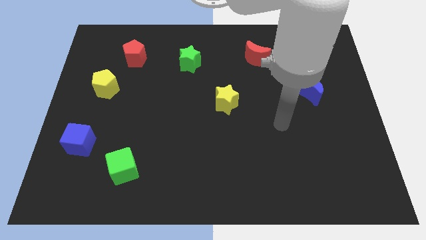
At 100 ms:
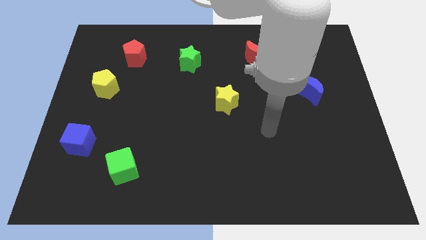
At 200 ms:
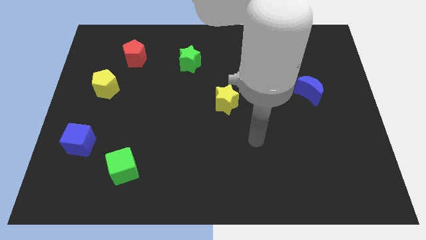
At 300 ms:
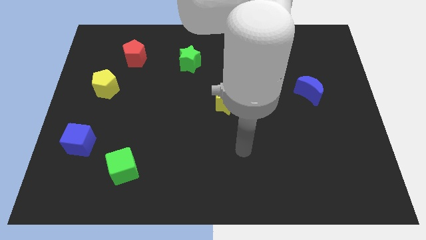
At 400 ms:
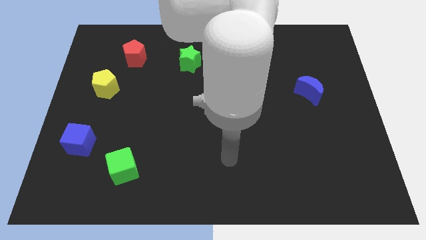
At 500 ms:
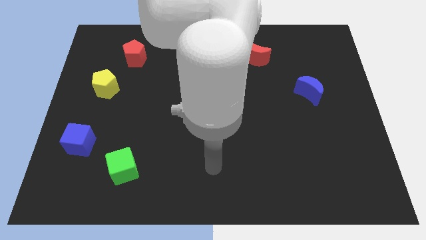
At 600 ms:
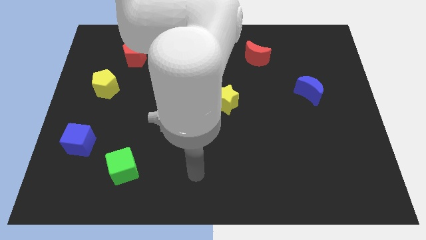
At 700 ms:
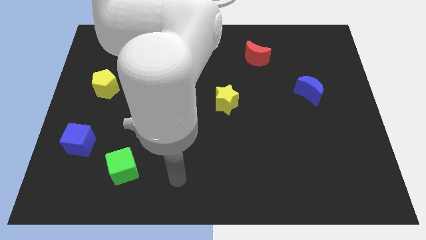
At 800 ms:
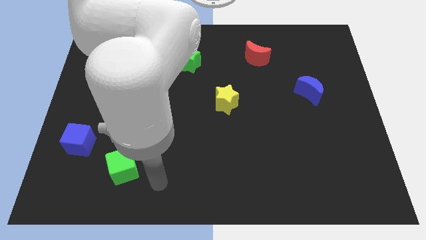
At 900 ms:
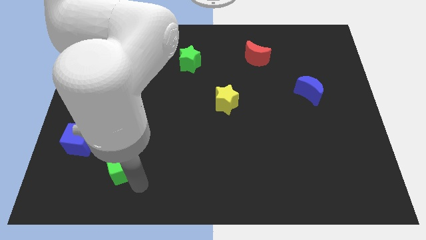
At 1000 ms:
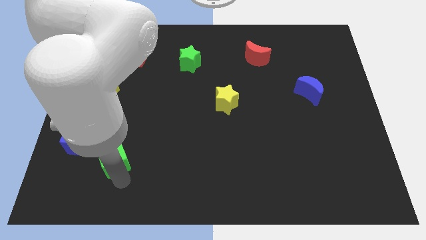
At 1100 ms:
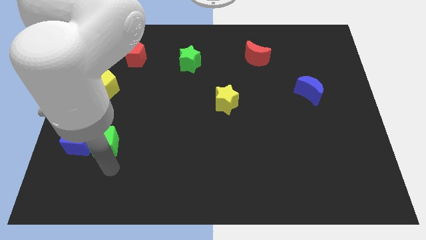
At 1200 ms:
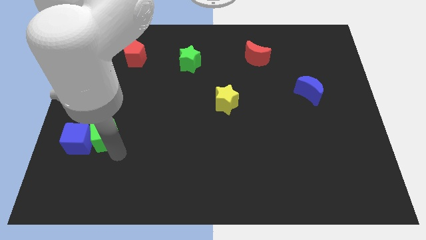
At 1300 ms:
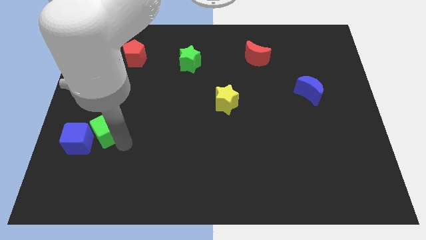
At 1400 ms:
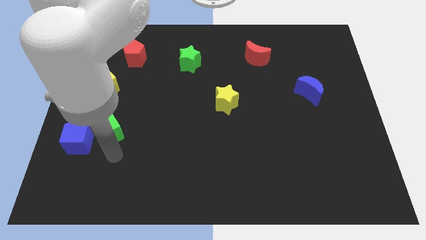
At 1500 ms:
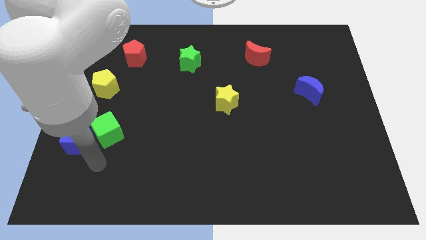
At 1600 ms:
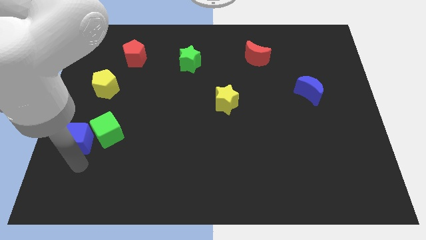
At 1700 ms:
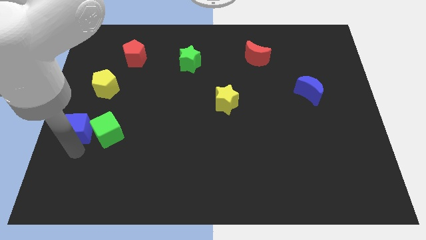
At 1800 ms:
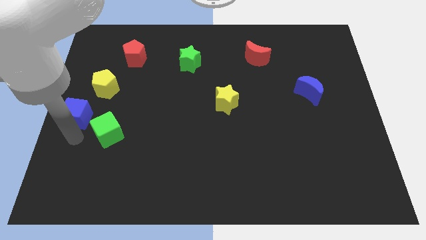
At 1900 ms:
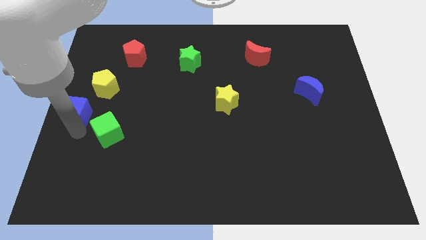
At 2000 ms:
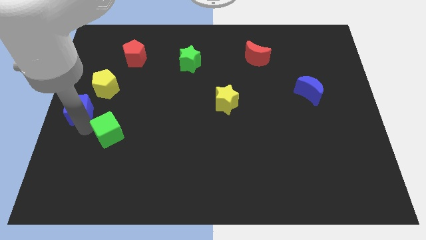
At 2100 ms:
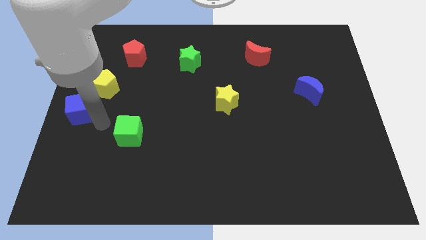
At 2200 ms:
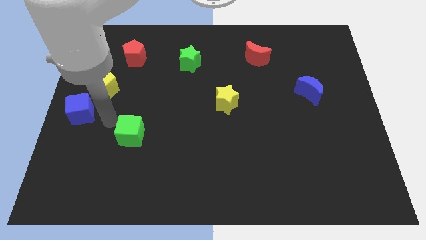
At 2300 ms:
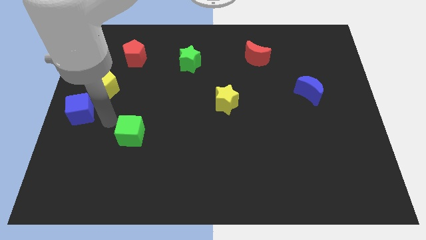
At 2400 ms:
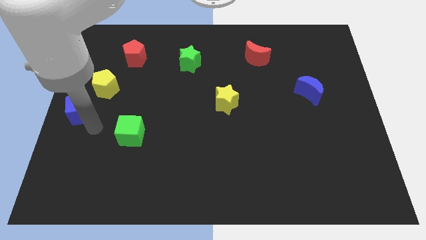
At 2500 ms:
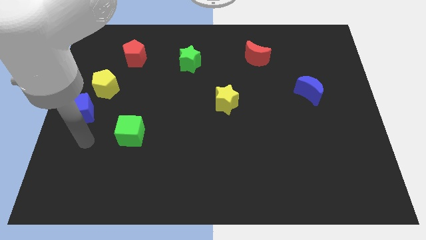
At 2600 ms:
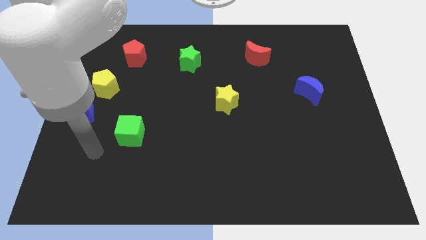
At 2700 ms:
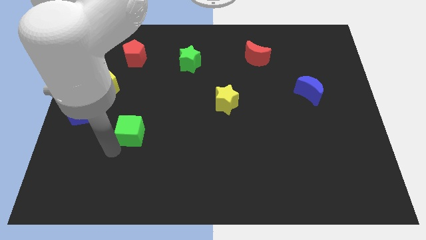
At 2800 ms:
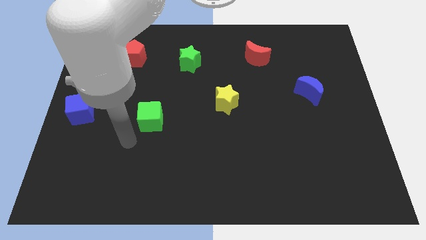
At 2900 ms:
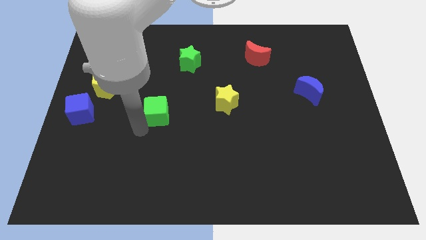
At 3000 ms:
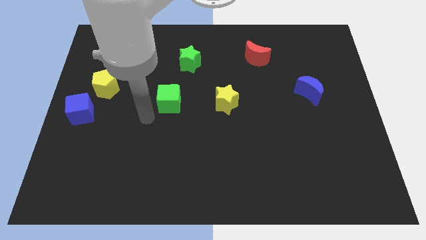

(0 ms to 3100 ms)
separate the green and blue cubes in opposite direction

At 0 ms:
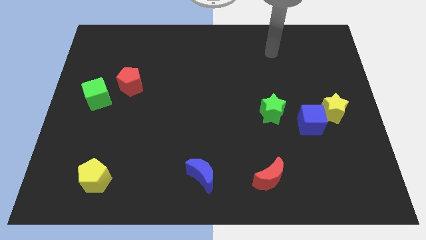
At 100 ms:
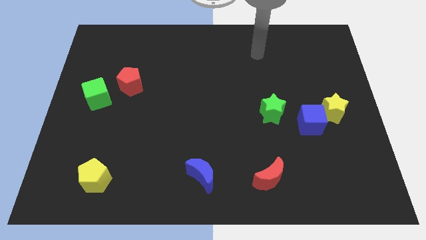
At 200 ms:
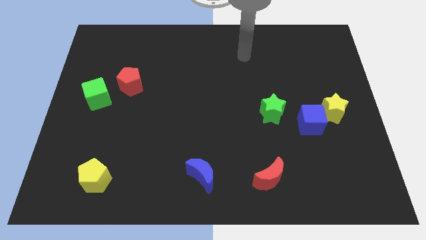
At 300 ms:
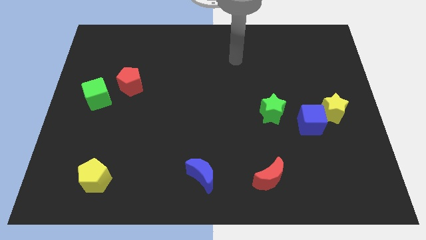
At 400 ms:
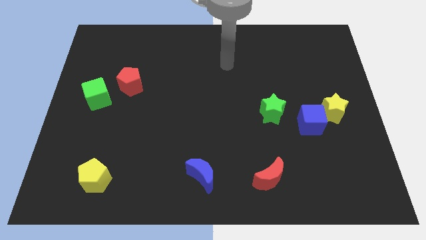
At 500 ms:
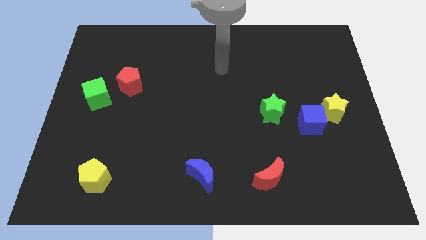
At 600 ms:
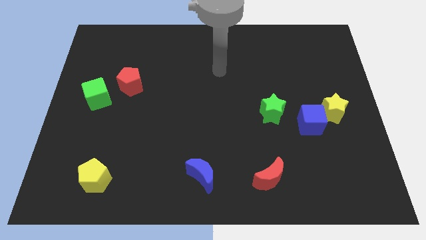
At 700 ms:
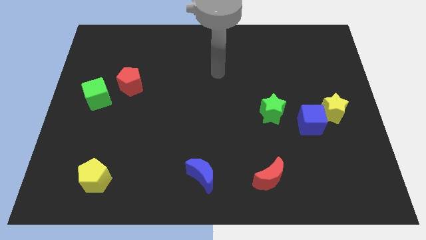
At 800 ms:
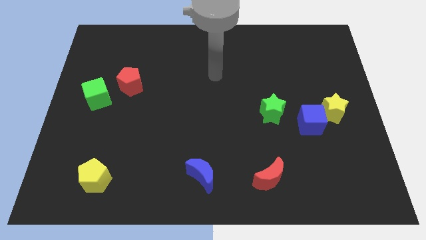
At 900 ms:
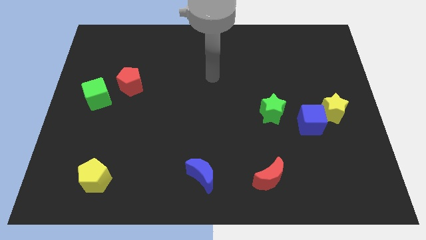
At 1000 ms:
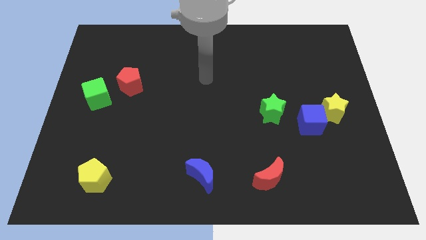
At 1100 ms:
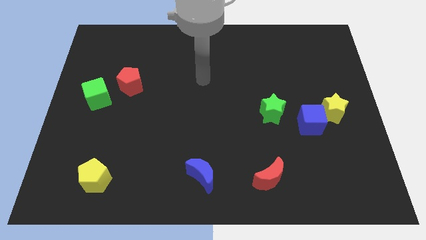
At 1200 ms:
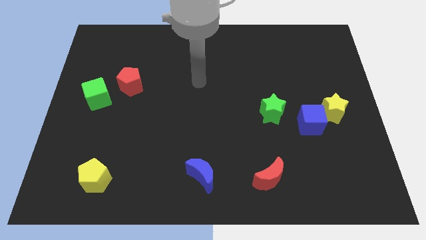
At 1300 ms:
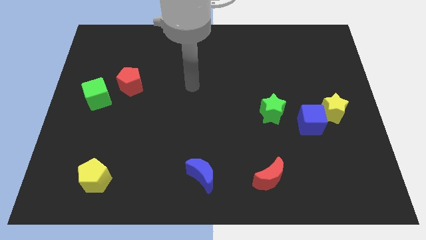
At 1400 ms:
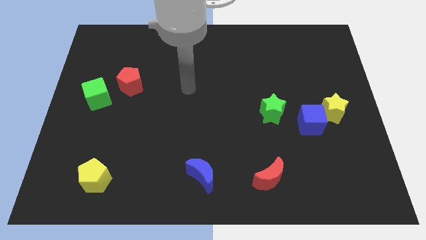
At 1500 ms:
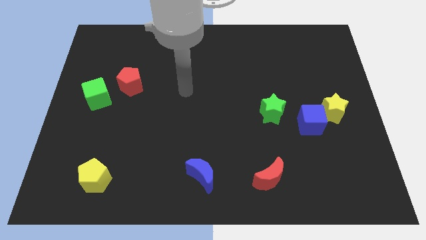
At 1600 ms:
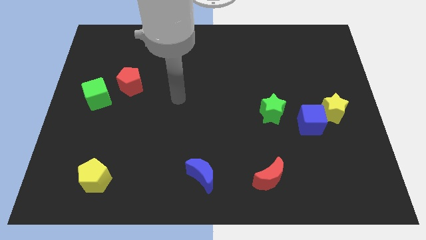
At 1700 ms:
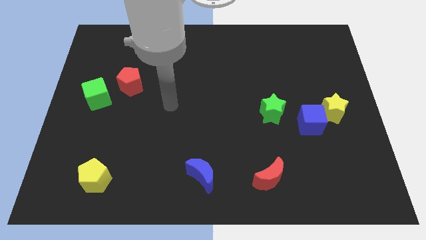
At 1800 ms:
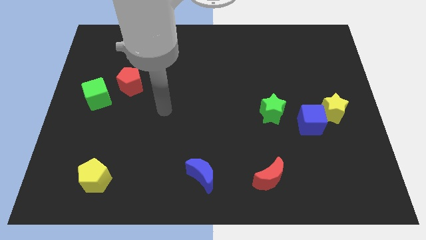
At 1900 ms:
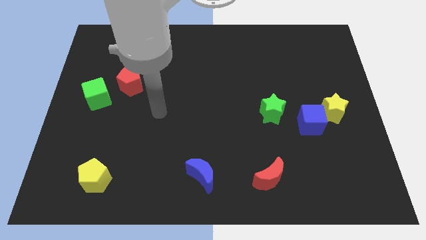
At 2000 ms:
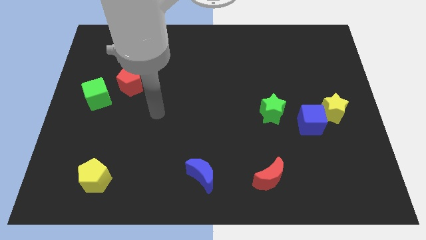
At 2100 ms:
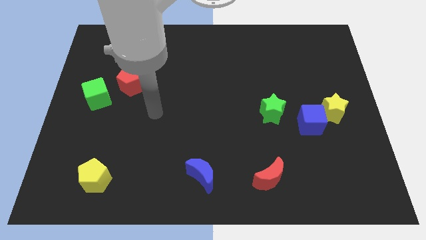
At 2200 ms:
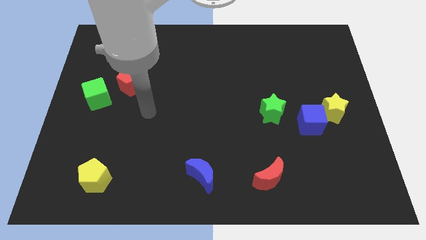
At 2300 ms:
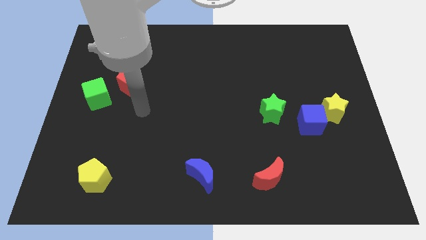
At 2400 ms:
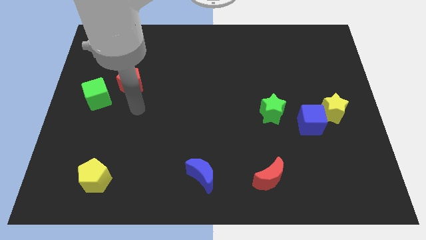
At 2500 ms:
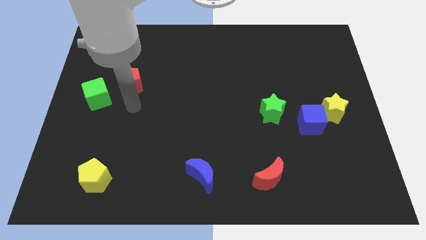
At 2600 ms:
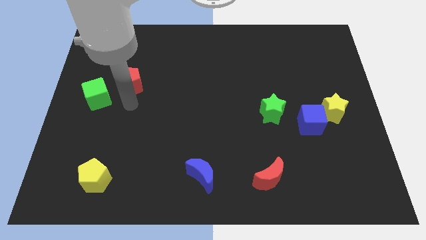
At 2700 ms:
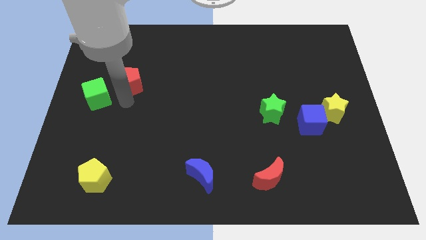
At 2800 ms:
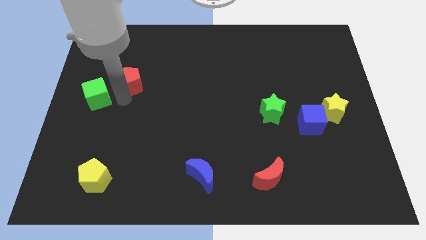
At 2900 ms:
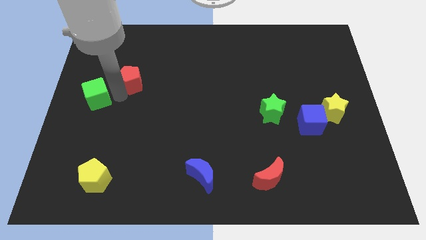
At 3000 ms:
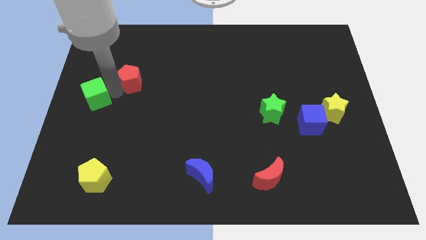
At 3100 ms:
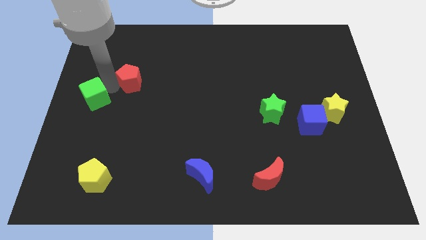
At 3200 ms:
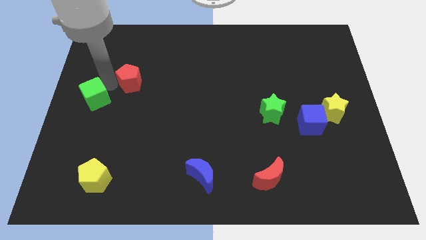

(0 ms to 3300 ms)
place your arm in between the green cube and the red pentagon

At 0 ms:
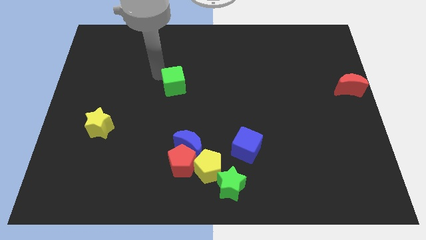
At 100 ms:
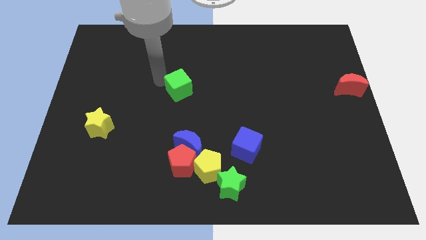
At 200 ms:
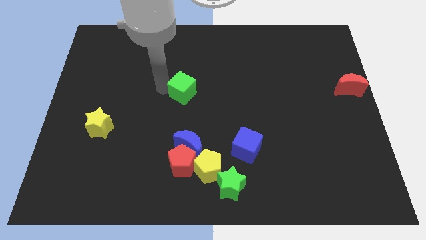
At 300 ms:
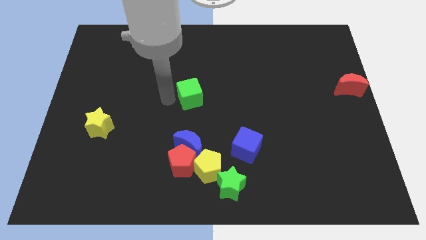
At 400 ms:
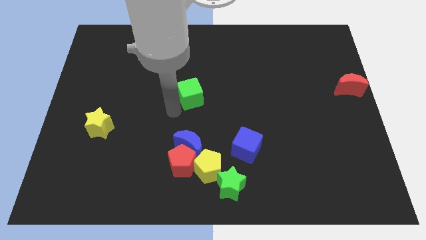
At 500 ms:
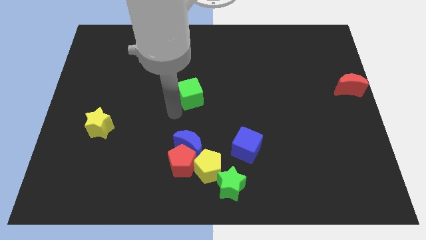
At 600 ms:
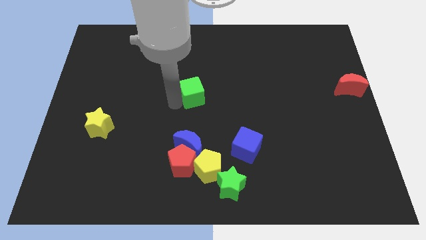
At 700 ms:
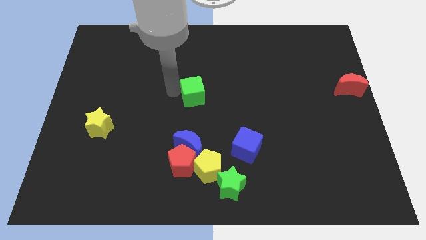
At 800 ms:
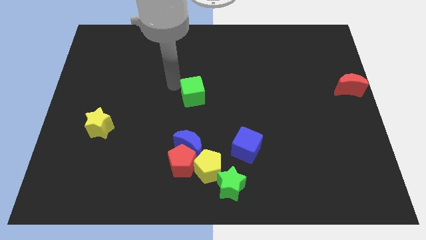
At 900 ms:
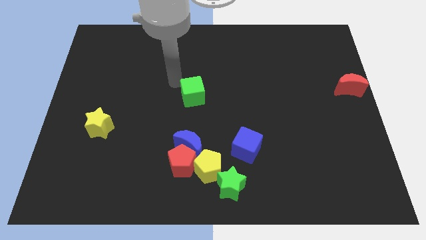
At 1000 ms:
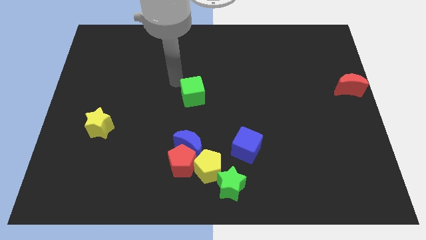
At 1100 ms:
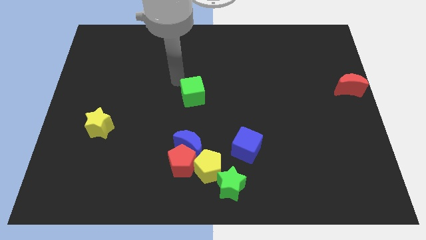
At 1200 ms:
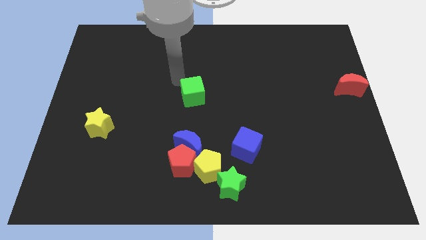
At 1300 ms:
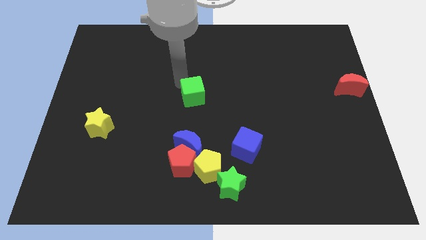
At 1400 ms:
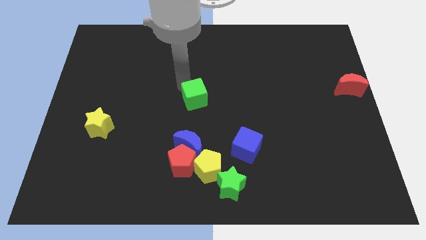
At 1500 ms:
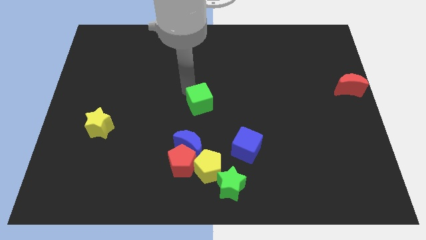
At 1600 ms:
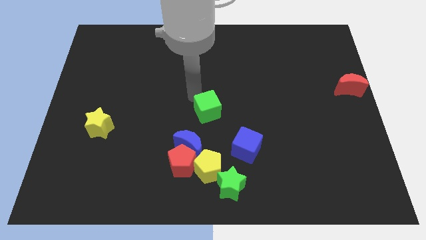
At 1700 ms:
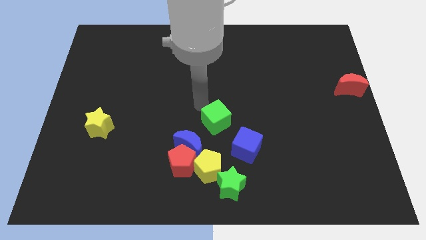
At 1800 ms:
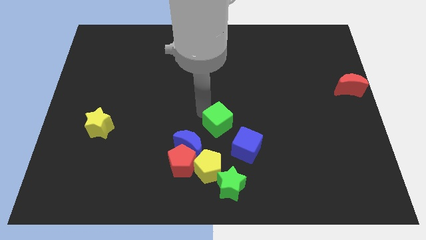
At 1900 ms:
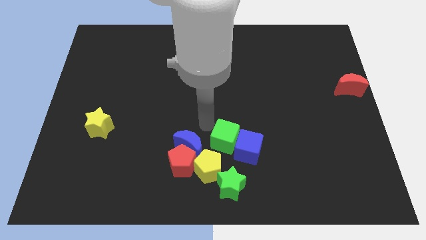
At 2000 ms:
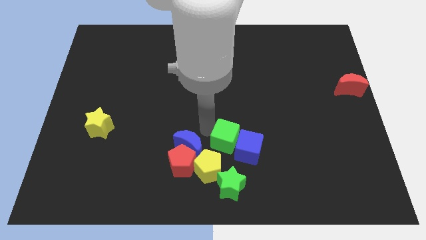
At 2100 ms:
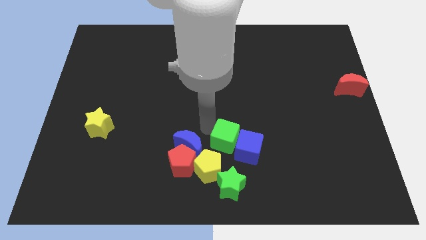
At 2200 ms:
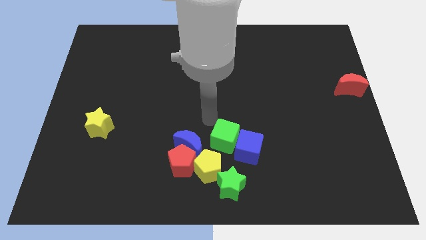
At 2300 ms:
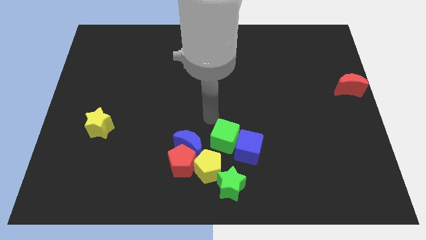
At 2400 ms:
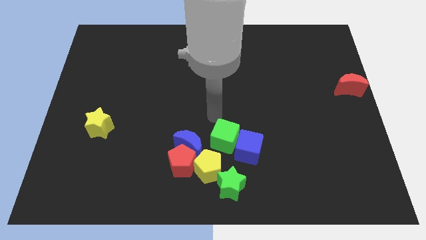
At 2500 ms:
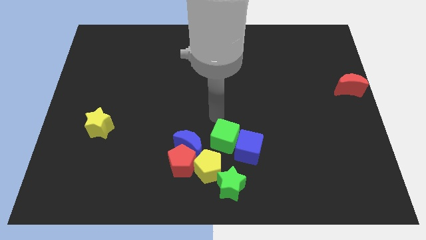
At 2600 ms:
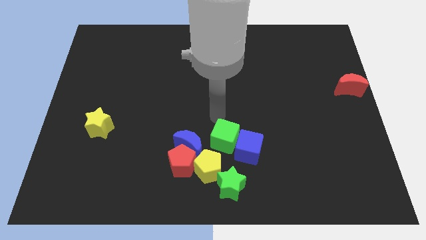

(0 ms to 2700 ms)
push the green cube to the left of the blue cube
